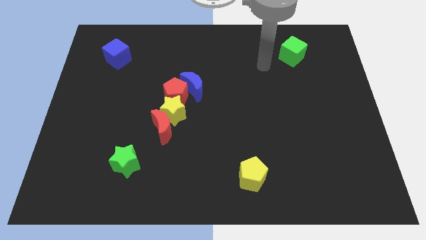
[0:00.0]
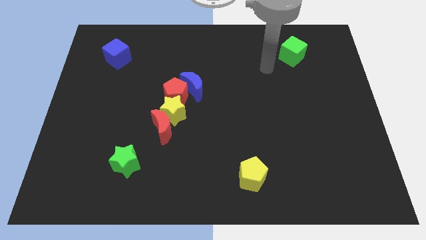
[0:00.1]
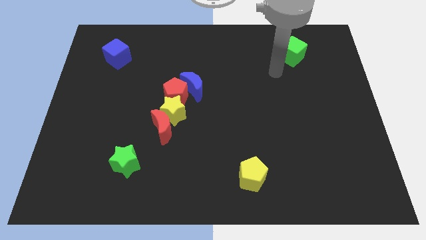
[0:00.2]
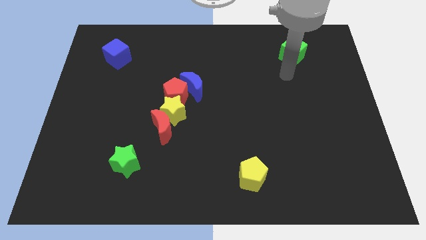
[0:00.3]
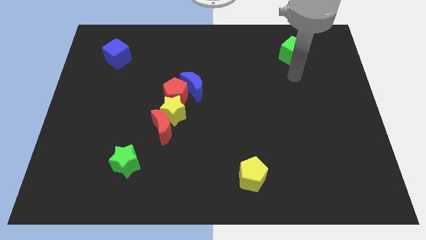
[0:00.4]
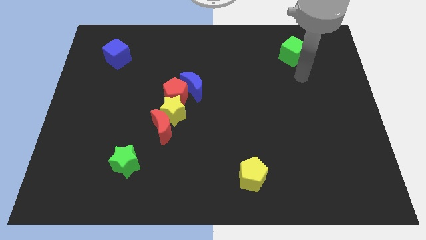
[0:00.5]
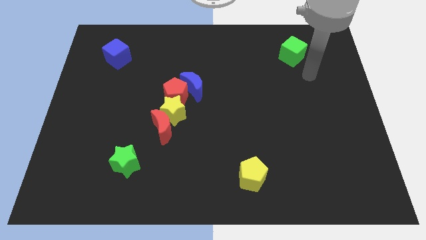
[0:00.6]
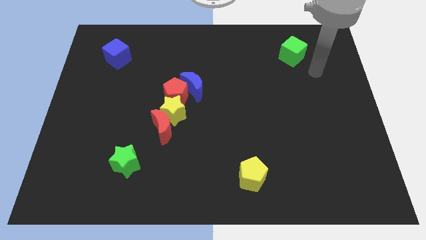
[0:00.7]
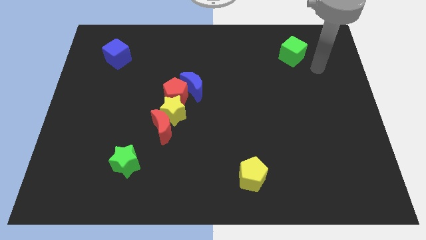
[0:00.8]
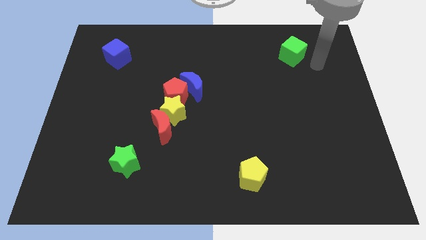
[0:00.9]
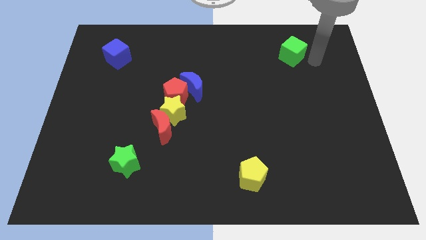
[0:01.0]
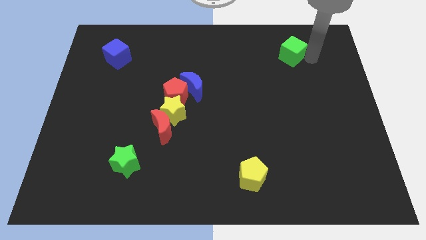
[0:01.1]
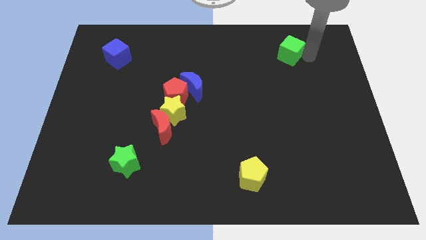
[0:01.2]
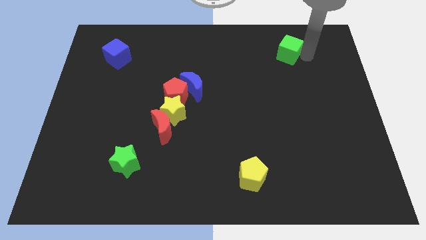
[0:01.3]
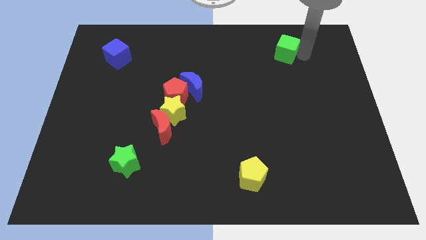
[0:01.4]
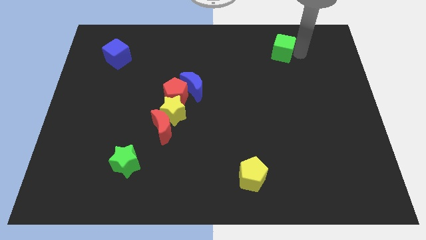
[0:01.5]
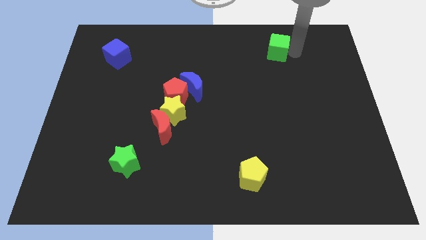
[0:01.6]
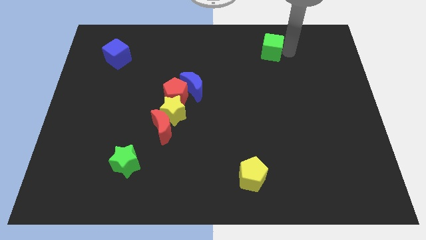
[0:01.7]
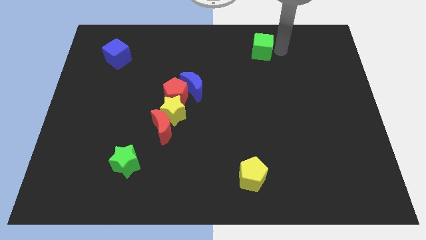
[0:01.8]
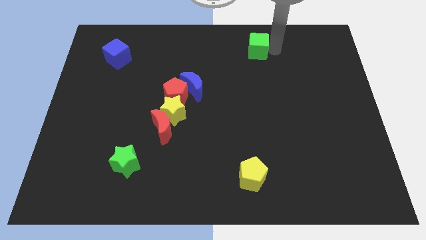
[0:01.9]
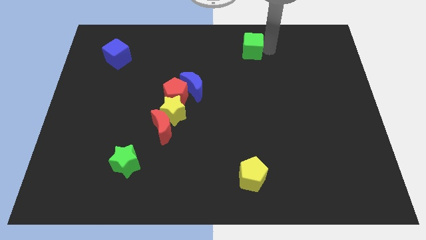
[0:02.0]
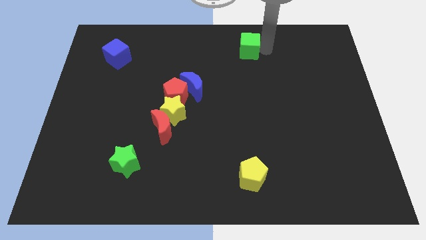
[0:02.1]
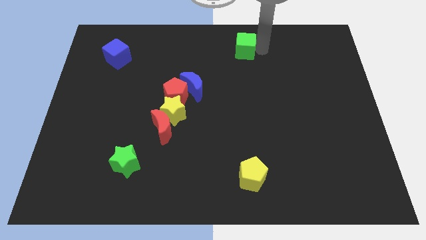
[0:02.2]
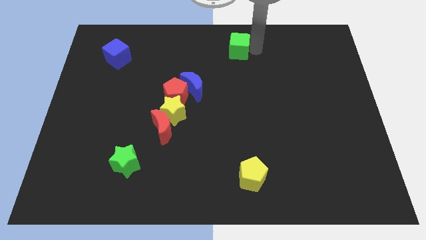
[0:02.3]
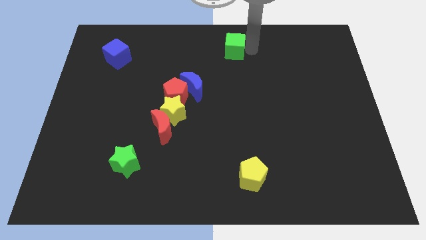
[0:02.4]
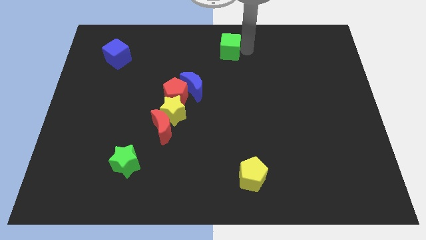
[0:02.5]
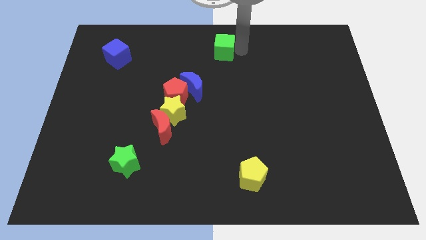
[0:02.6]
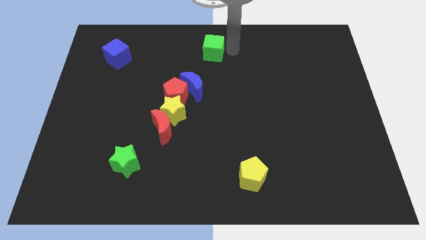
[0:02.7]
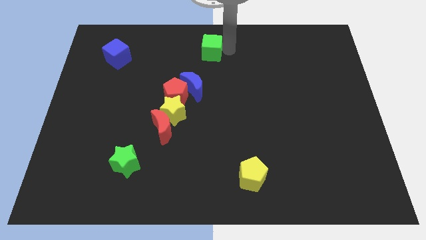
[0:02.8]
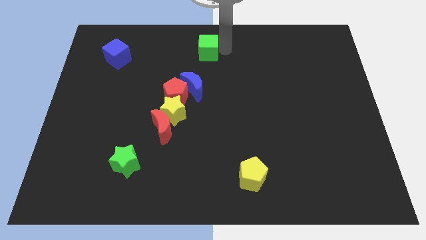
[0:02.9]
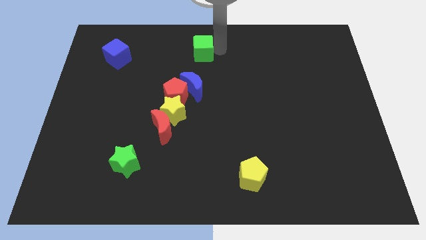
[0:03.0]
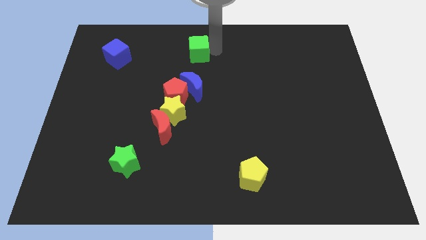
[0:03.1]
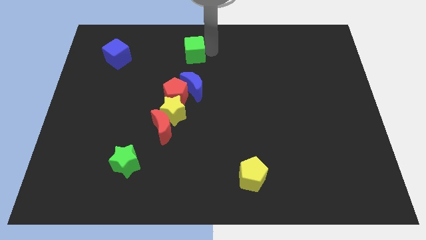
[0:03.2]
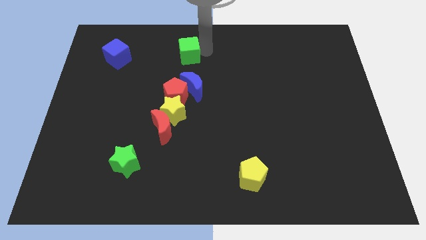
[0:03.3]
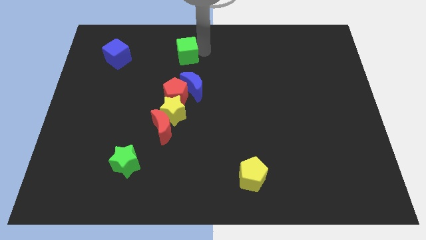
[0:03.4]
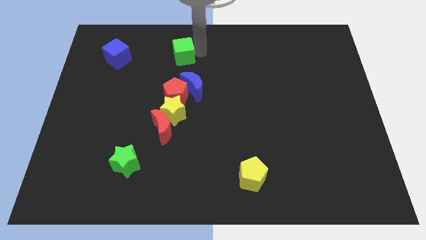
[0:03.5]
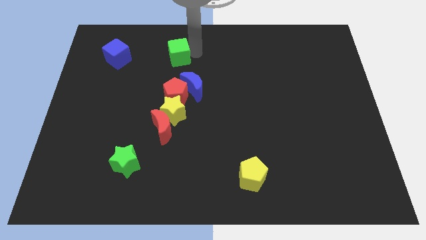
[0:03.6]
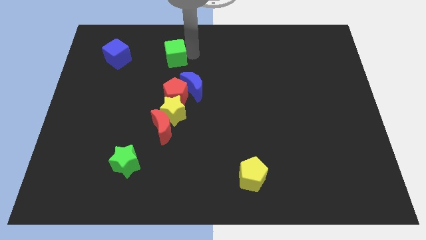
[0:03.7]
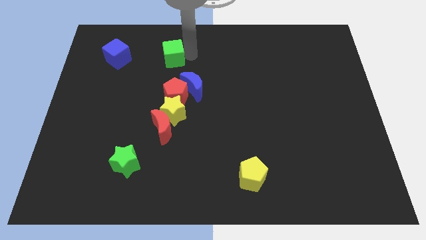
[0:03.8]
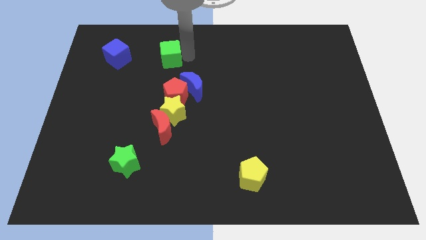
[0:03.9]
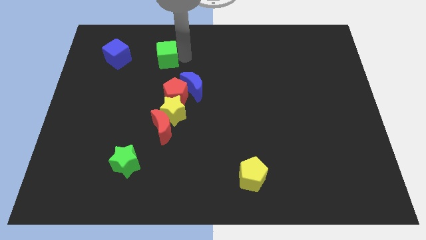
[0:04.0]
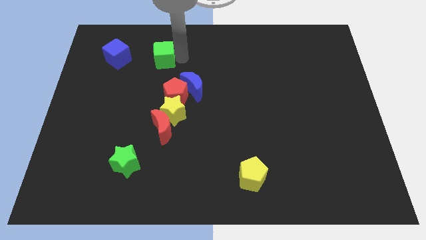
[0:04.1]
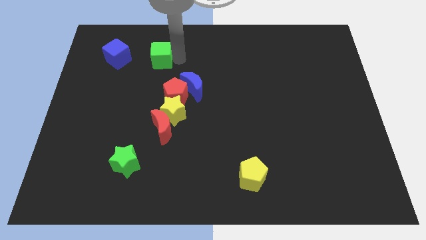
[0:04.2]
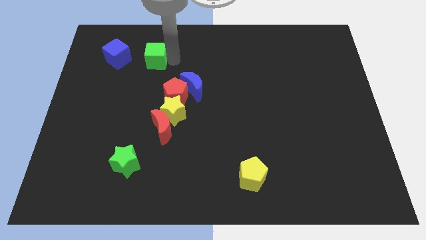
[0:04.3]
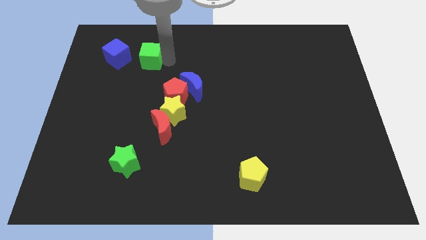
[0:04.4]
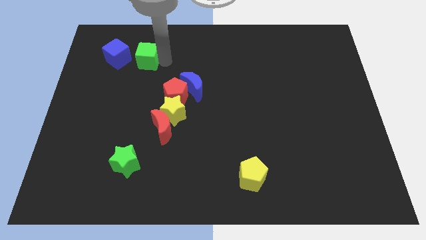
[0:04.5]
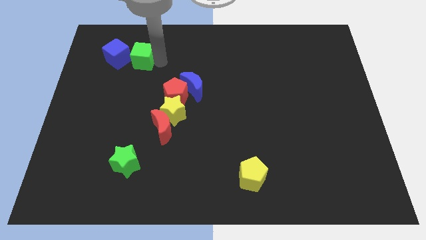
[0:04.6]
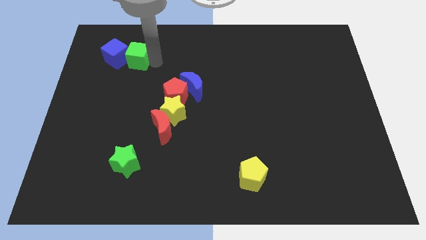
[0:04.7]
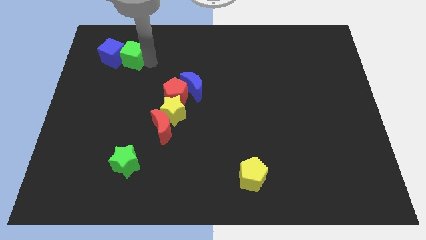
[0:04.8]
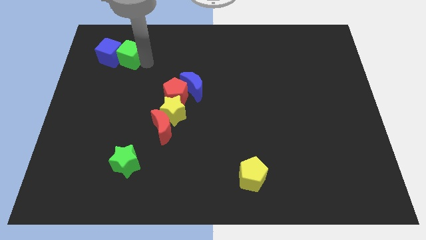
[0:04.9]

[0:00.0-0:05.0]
move the green cube towards the blue cube

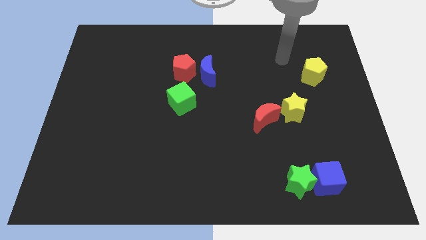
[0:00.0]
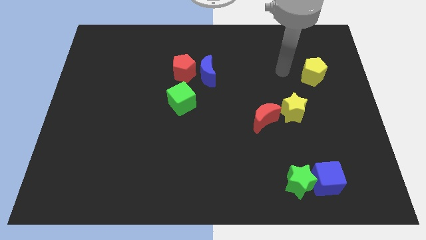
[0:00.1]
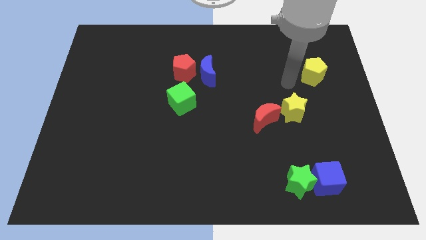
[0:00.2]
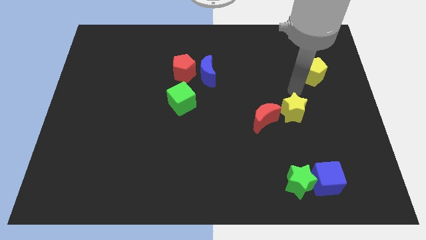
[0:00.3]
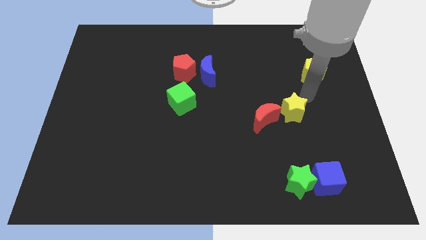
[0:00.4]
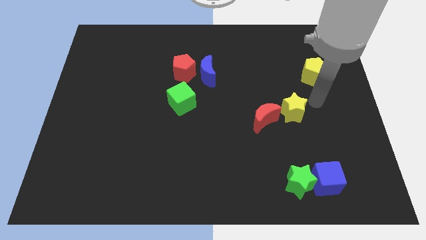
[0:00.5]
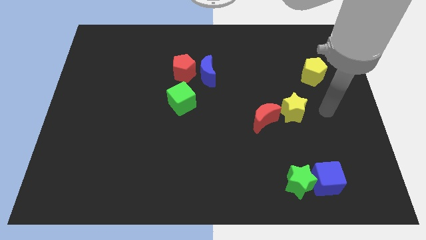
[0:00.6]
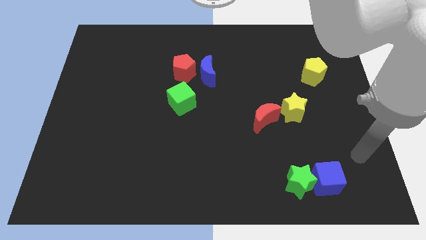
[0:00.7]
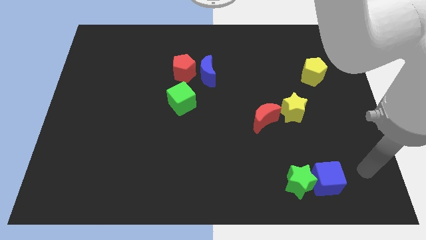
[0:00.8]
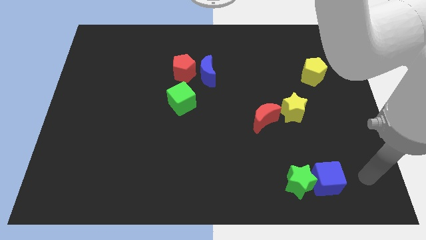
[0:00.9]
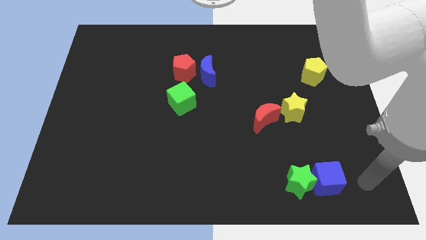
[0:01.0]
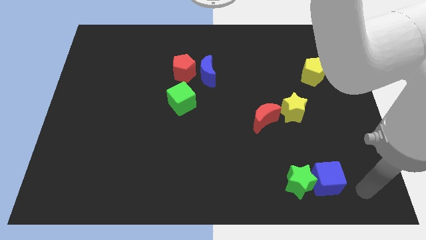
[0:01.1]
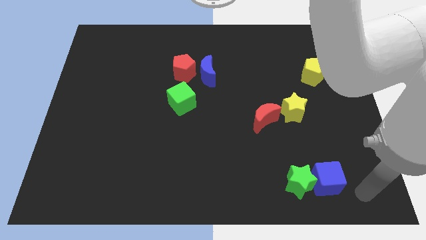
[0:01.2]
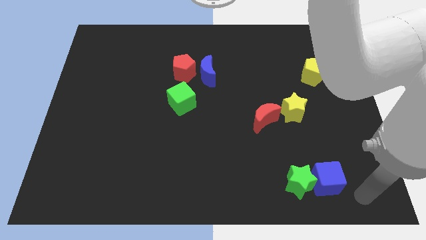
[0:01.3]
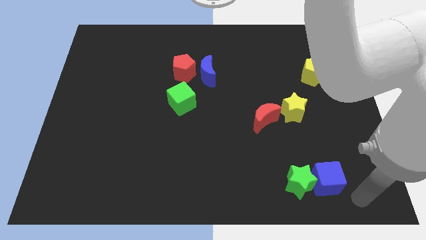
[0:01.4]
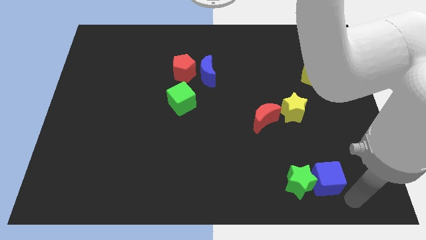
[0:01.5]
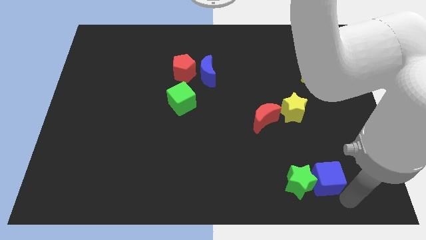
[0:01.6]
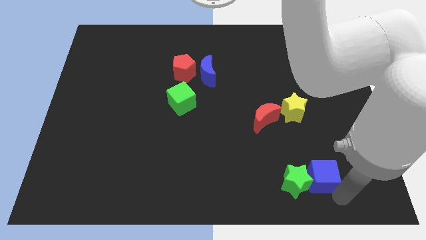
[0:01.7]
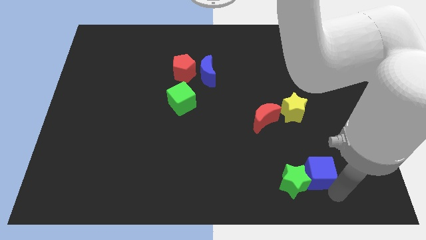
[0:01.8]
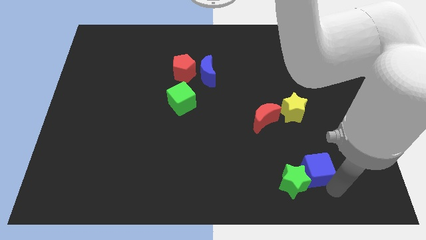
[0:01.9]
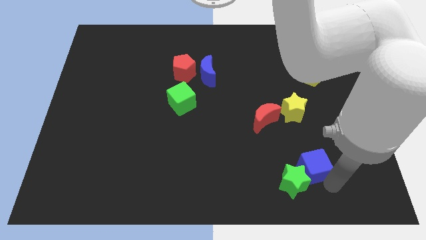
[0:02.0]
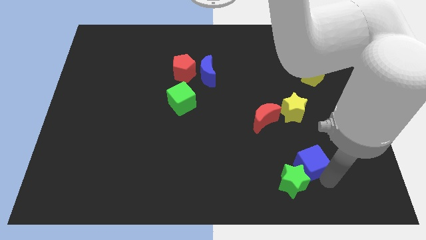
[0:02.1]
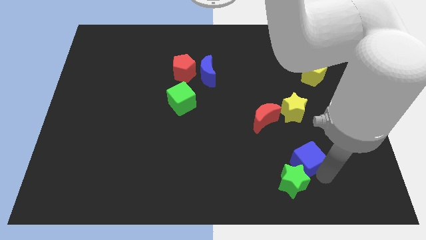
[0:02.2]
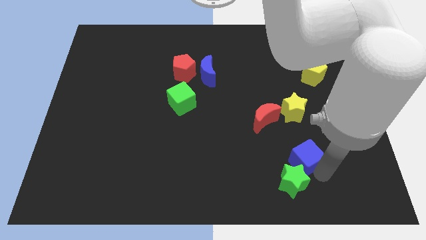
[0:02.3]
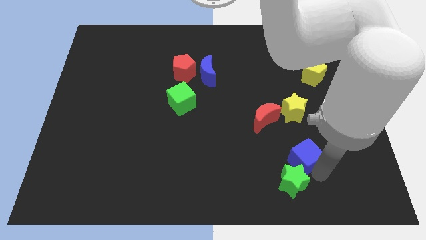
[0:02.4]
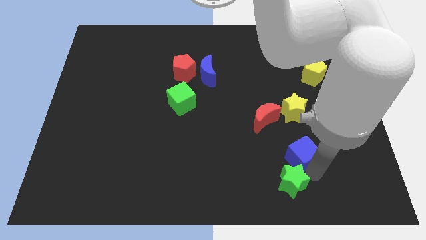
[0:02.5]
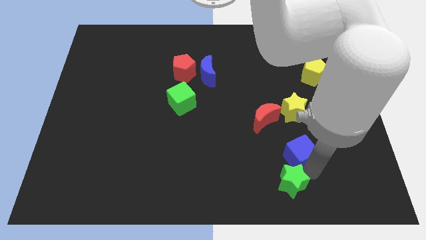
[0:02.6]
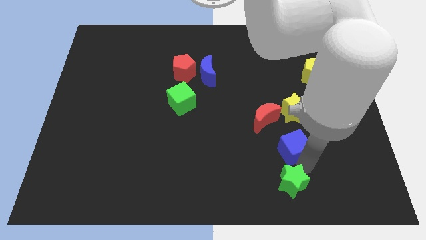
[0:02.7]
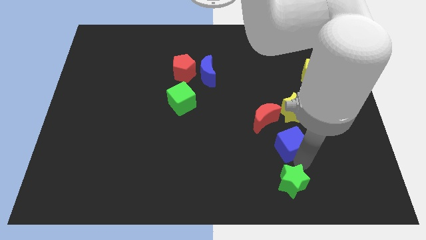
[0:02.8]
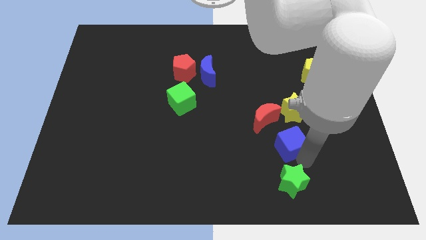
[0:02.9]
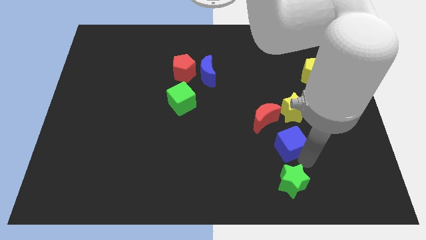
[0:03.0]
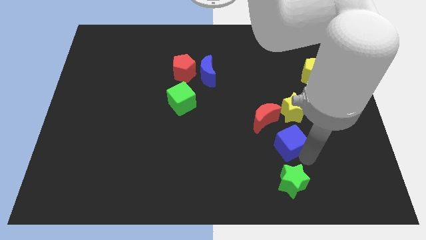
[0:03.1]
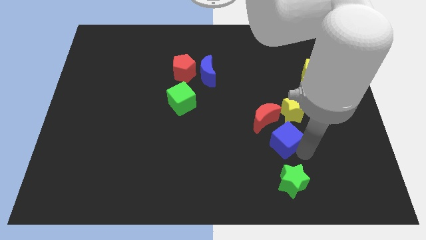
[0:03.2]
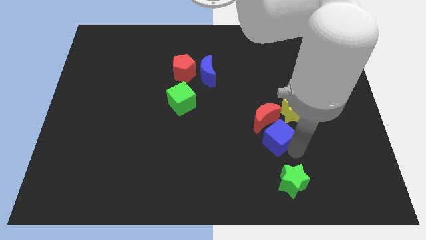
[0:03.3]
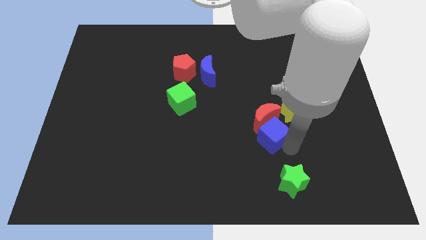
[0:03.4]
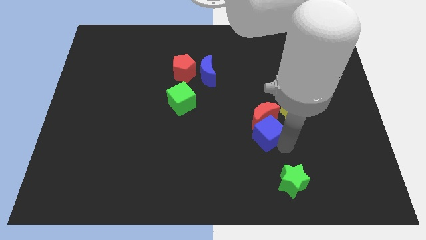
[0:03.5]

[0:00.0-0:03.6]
slide the blue cube to the red moon

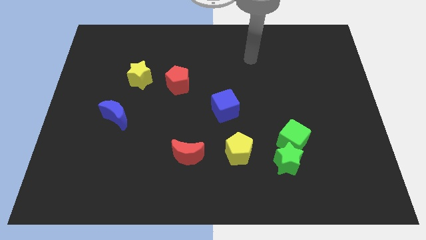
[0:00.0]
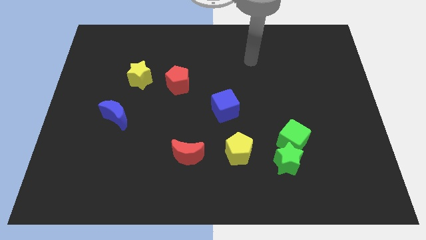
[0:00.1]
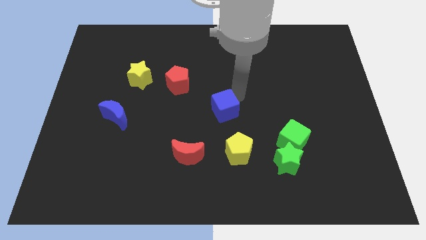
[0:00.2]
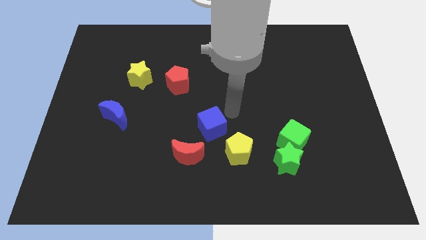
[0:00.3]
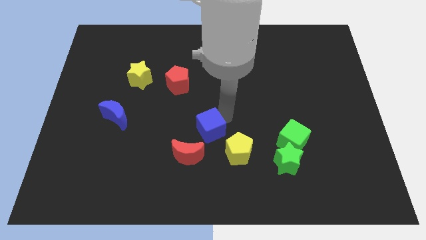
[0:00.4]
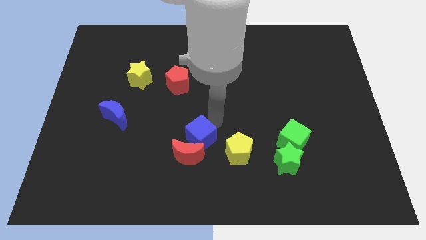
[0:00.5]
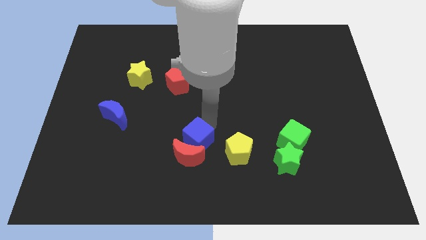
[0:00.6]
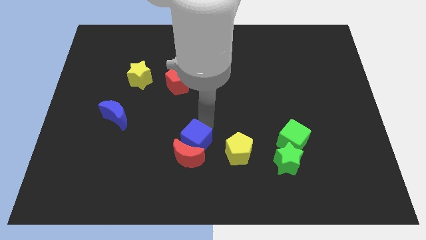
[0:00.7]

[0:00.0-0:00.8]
push the blue cube close to the red moon
